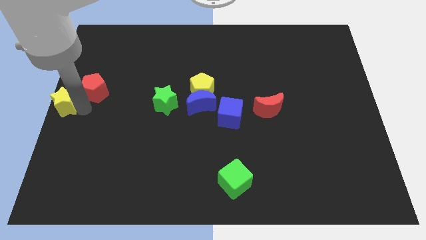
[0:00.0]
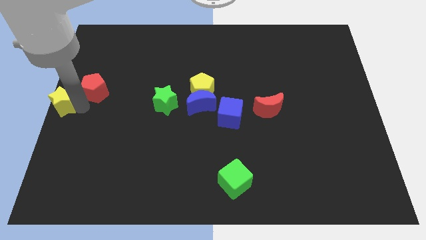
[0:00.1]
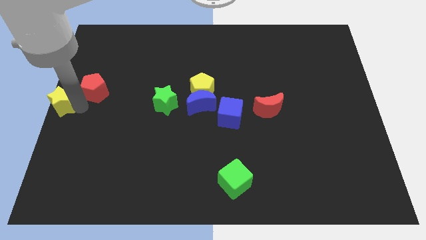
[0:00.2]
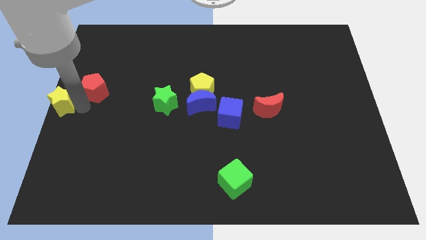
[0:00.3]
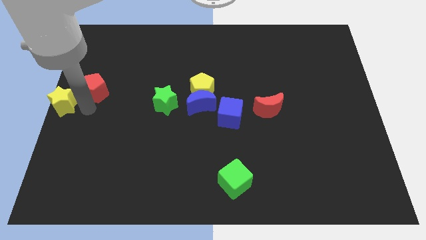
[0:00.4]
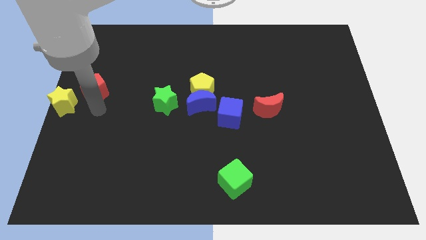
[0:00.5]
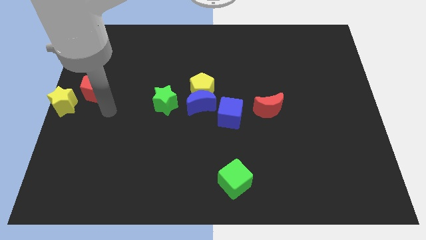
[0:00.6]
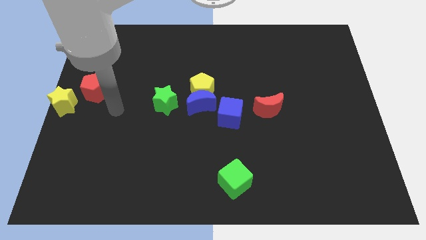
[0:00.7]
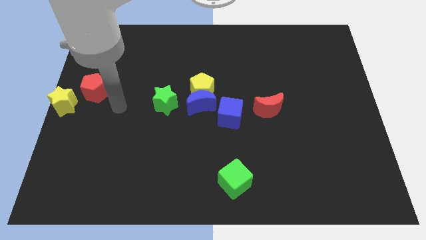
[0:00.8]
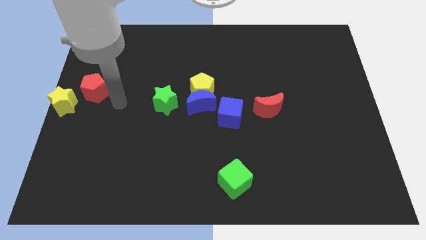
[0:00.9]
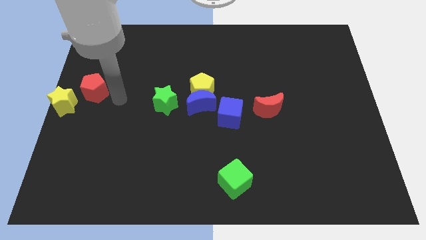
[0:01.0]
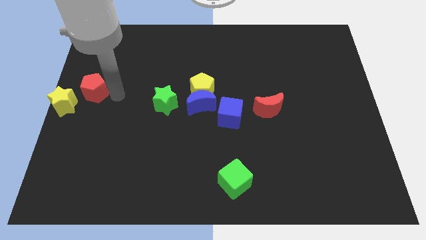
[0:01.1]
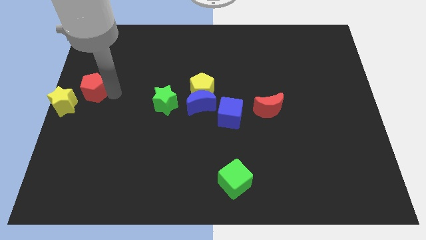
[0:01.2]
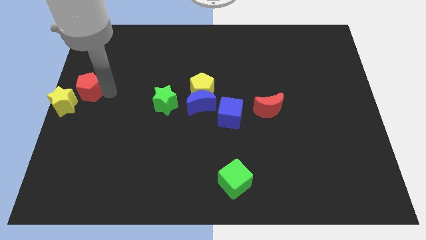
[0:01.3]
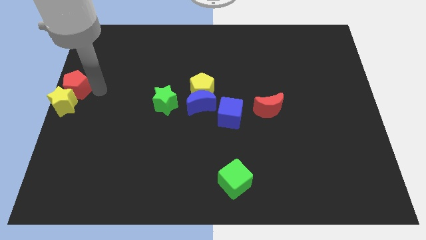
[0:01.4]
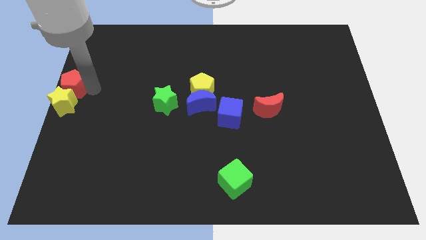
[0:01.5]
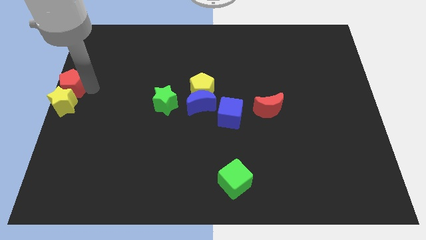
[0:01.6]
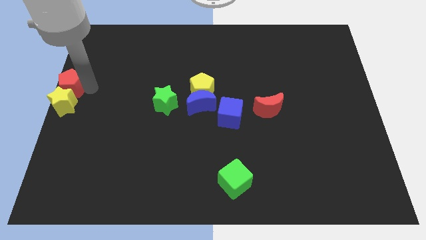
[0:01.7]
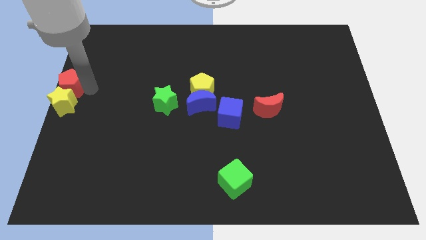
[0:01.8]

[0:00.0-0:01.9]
push the red pentagon to the top of the yellow star

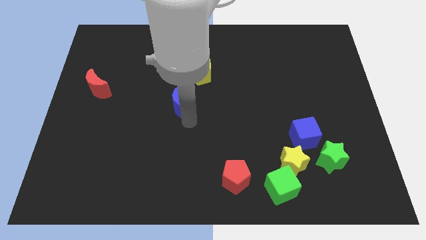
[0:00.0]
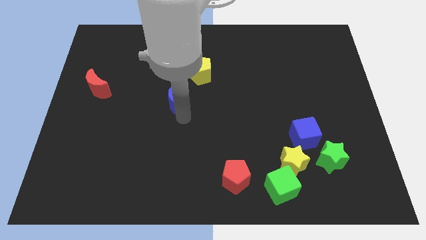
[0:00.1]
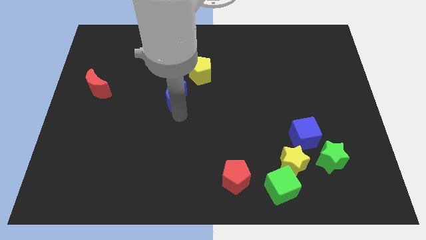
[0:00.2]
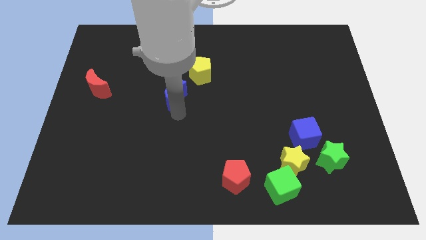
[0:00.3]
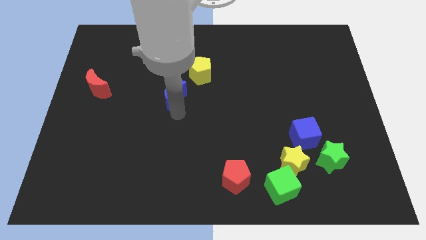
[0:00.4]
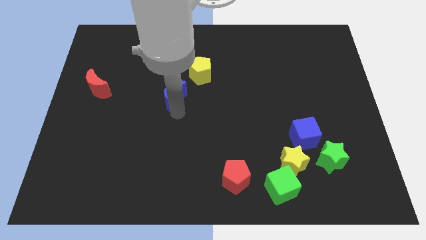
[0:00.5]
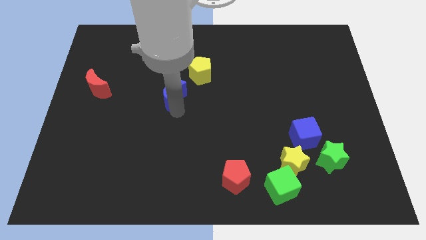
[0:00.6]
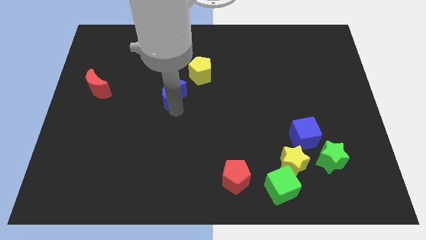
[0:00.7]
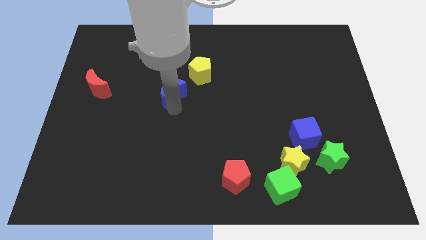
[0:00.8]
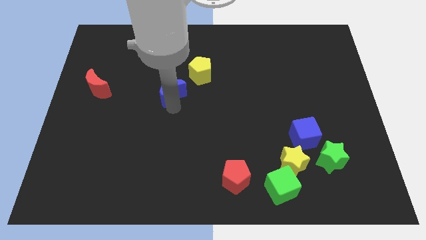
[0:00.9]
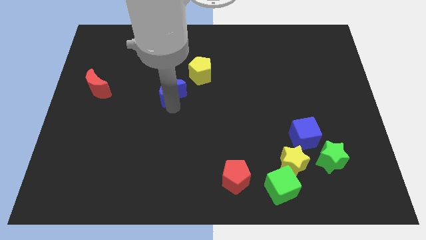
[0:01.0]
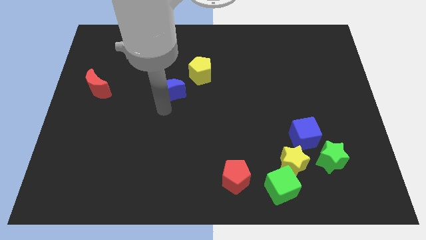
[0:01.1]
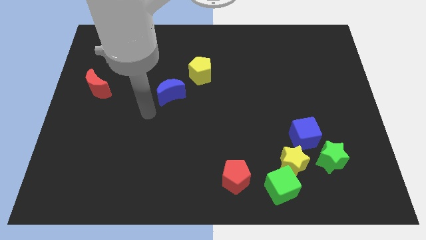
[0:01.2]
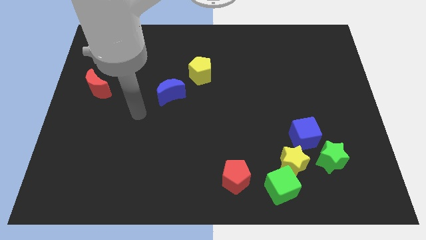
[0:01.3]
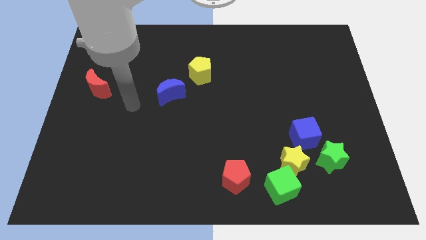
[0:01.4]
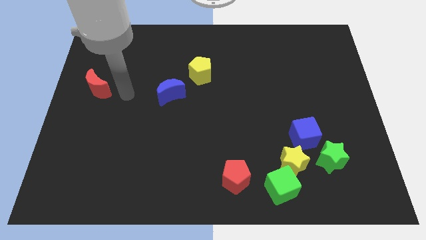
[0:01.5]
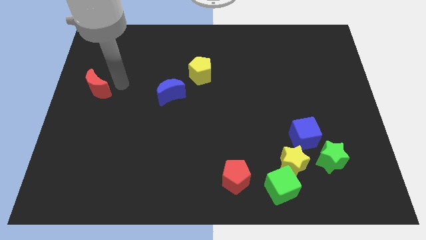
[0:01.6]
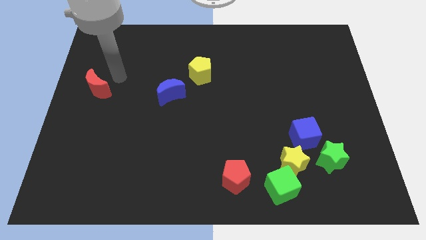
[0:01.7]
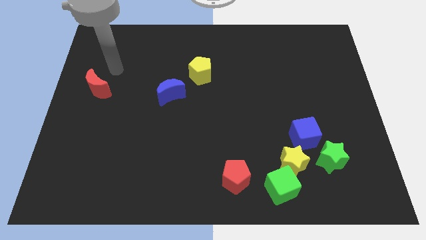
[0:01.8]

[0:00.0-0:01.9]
place blue crescent diagonally to the left of yellow pentagon

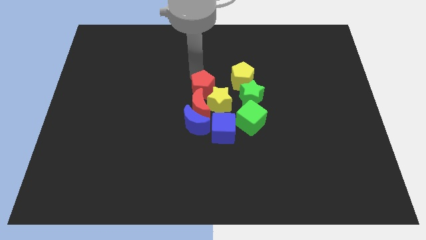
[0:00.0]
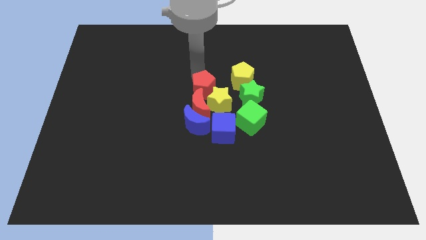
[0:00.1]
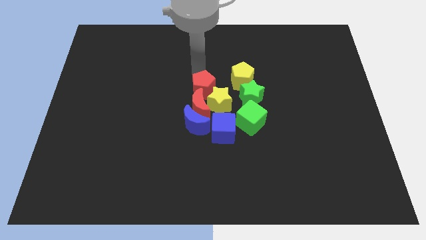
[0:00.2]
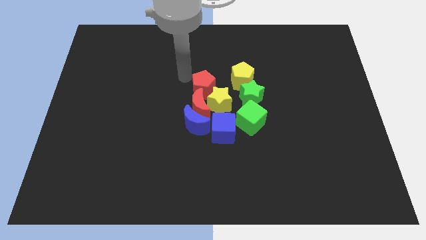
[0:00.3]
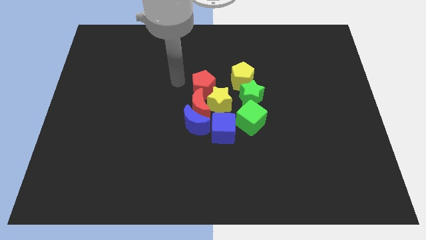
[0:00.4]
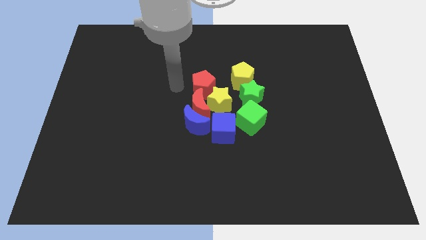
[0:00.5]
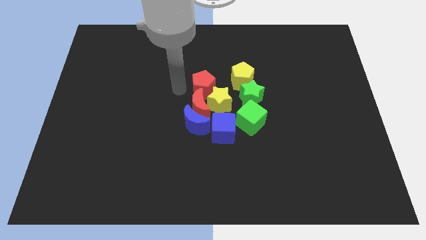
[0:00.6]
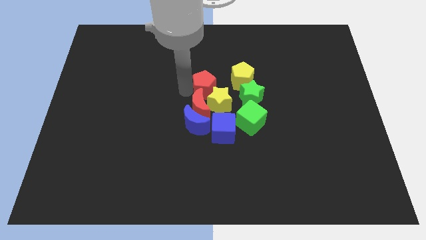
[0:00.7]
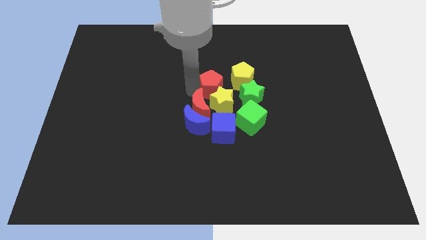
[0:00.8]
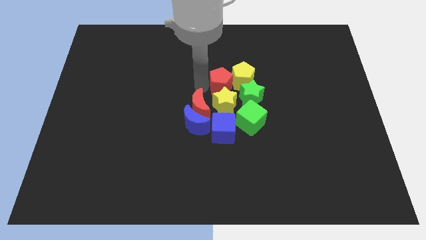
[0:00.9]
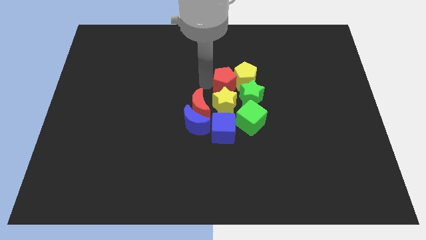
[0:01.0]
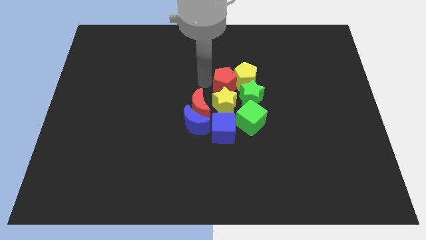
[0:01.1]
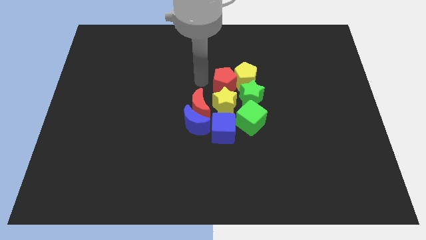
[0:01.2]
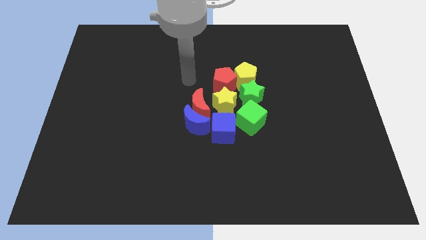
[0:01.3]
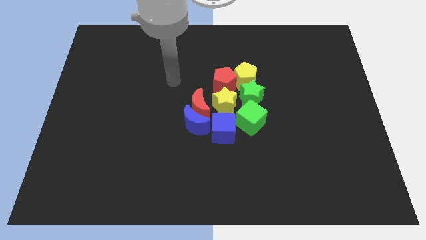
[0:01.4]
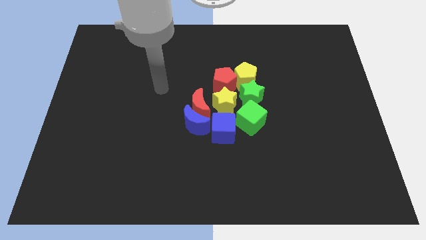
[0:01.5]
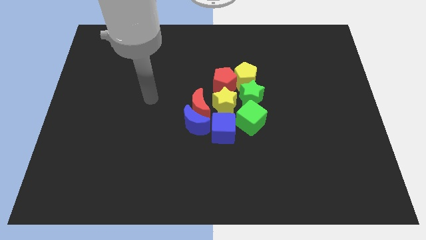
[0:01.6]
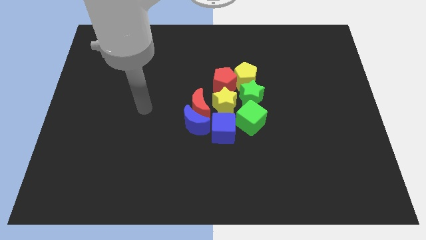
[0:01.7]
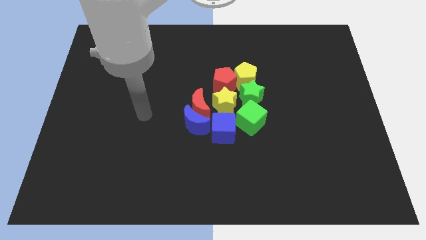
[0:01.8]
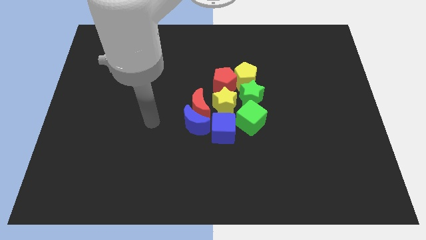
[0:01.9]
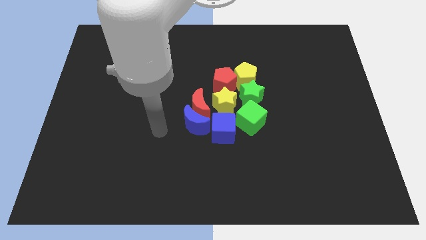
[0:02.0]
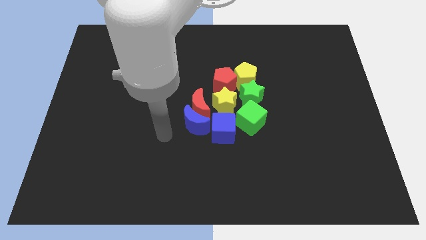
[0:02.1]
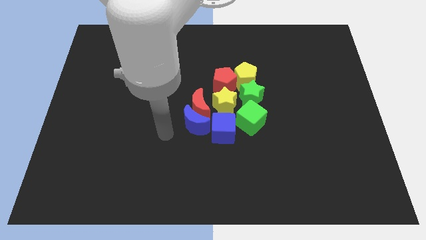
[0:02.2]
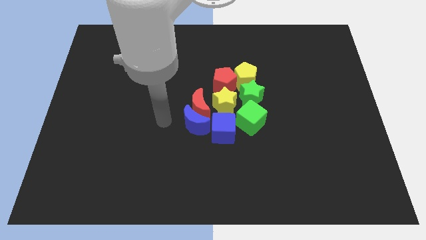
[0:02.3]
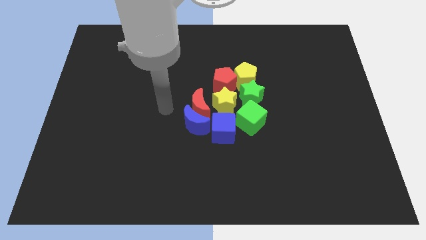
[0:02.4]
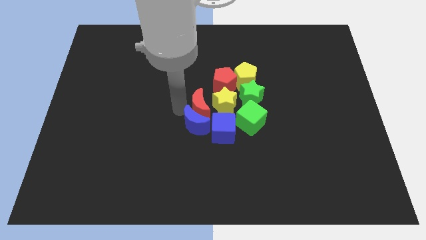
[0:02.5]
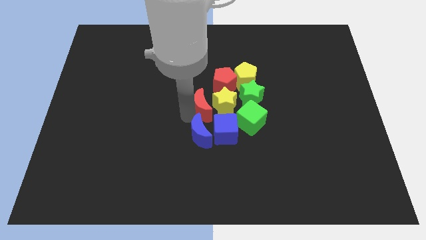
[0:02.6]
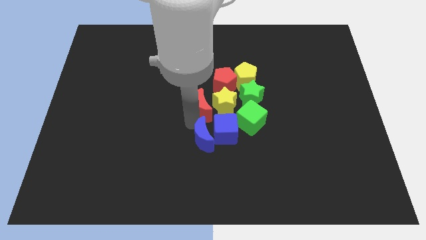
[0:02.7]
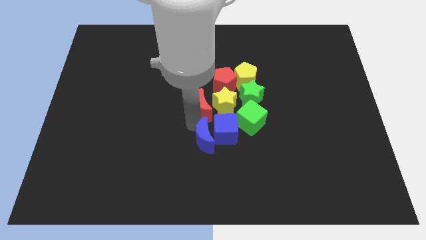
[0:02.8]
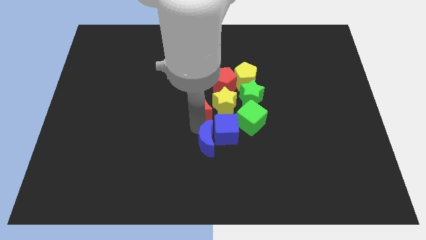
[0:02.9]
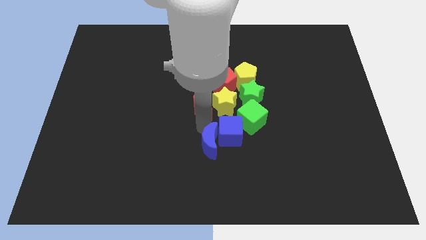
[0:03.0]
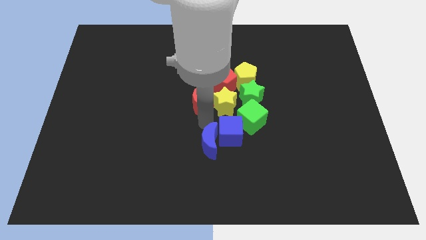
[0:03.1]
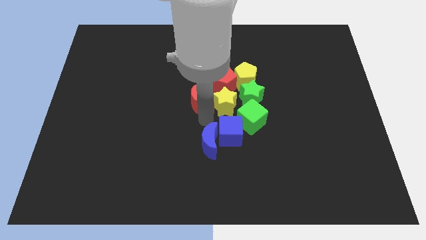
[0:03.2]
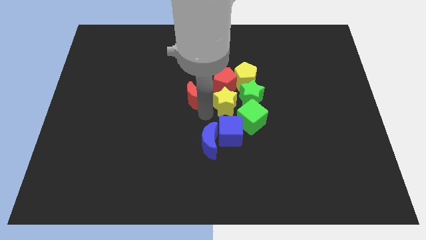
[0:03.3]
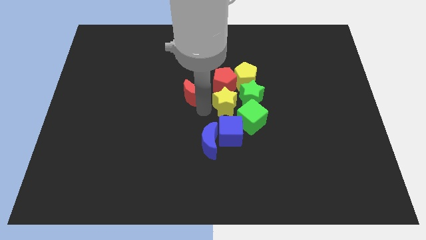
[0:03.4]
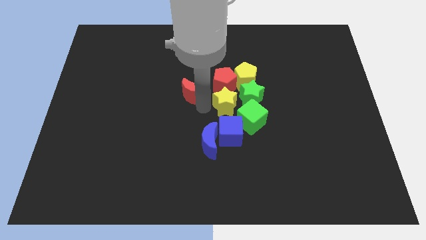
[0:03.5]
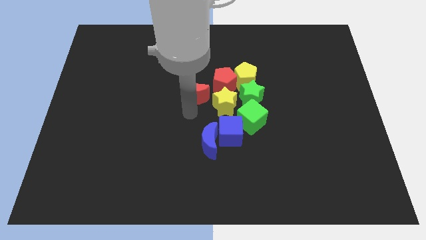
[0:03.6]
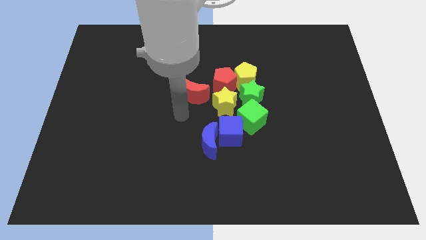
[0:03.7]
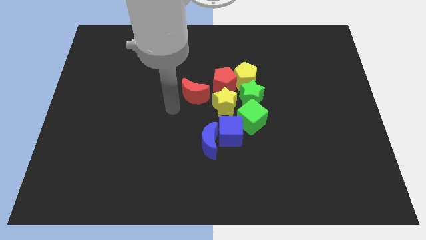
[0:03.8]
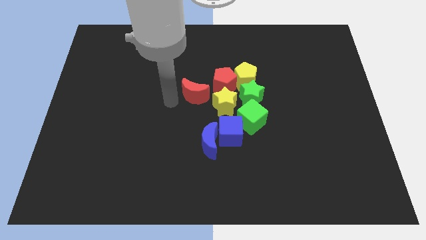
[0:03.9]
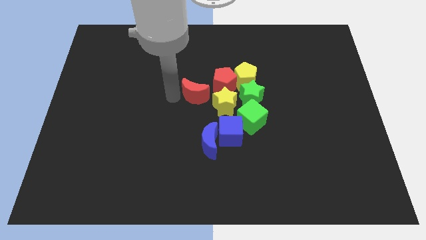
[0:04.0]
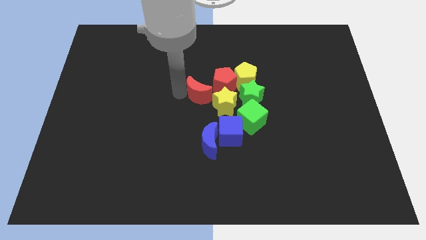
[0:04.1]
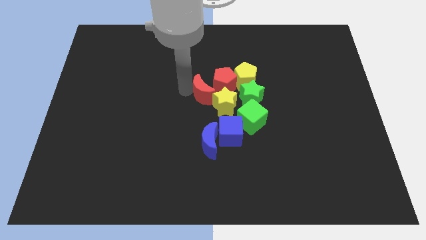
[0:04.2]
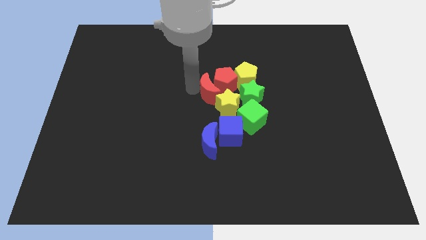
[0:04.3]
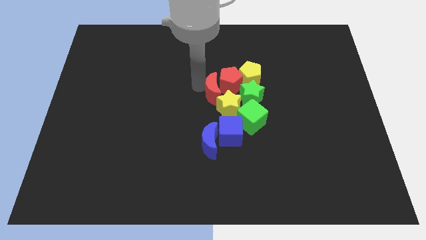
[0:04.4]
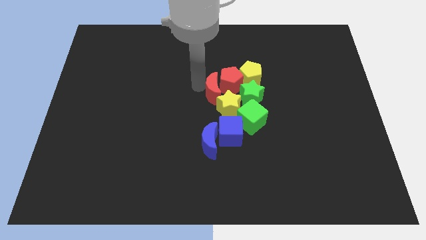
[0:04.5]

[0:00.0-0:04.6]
adjust the group of blocks at the center of the table

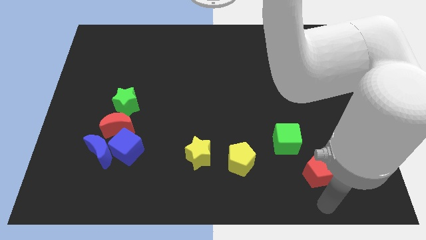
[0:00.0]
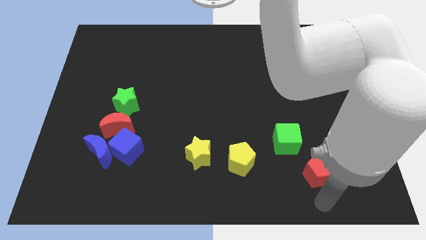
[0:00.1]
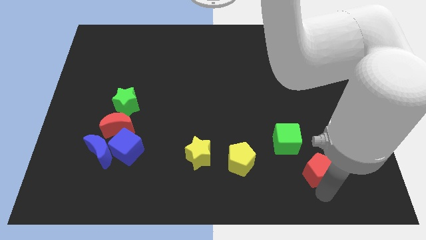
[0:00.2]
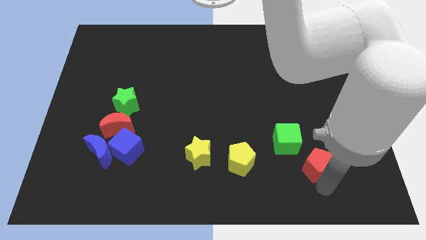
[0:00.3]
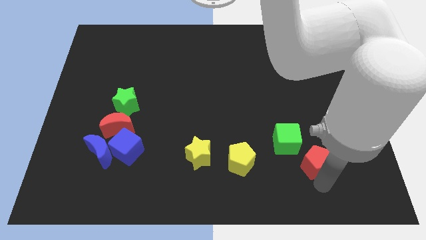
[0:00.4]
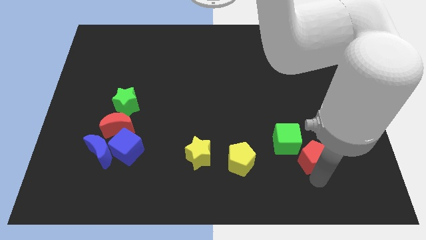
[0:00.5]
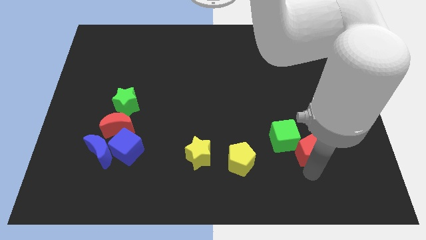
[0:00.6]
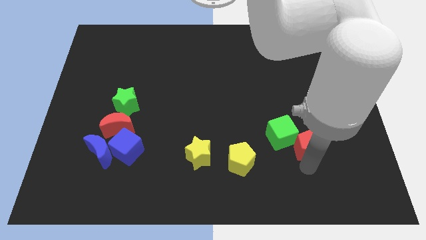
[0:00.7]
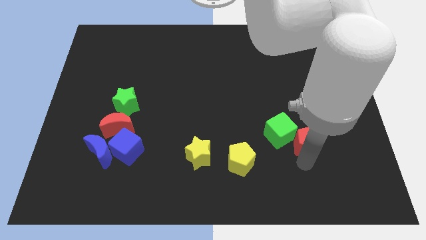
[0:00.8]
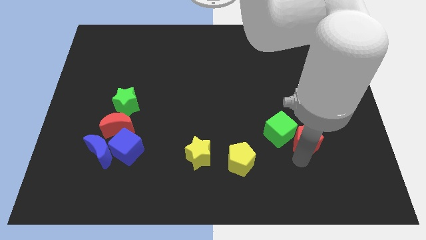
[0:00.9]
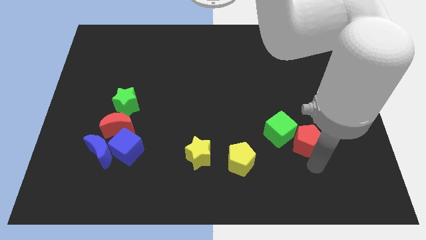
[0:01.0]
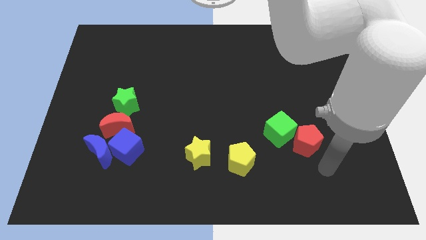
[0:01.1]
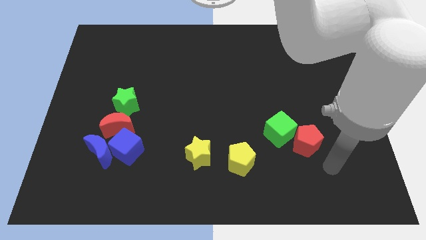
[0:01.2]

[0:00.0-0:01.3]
push the red pentagon to the right of the green cube
